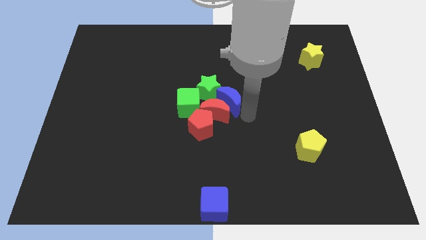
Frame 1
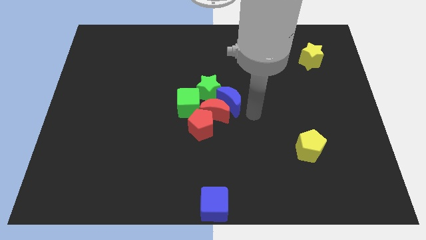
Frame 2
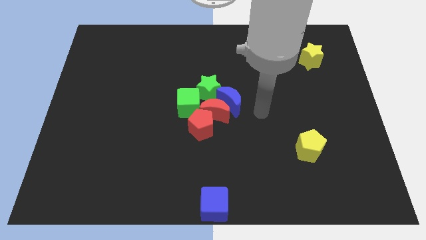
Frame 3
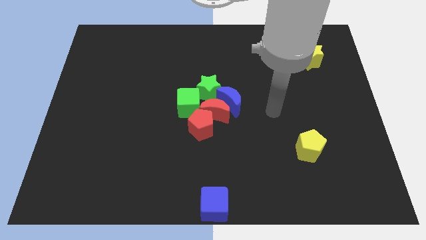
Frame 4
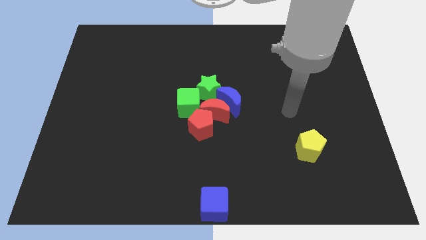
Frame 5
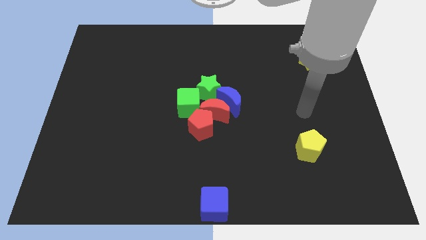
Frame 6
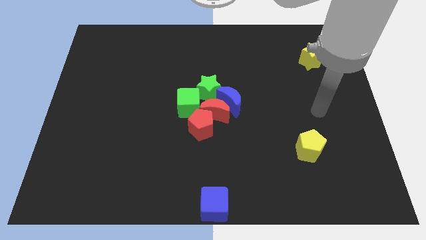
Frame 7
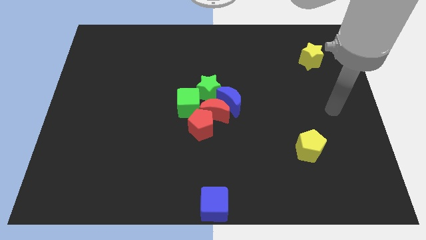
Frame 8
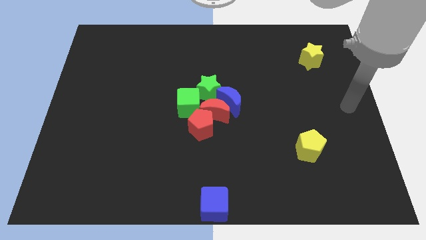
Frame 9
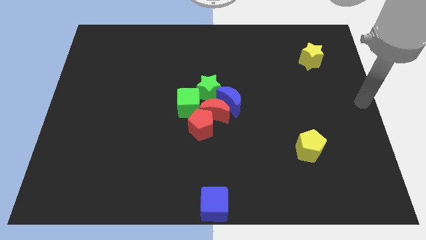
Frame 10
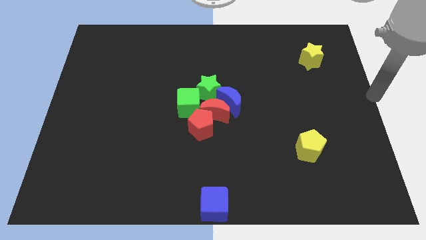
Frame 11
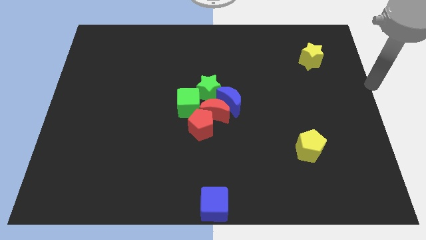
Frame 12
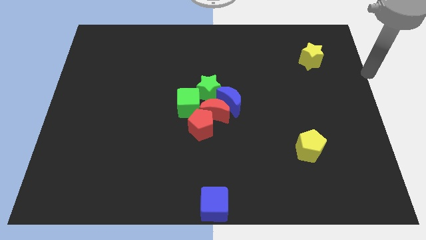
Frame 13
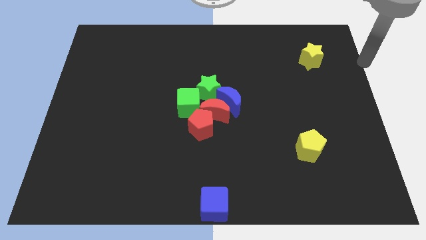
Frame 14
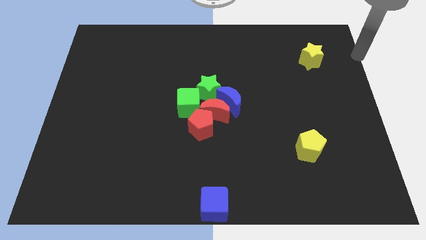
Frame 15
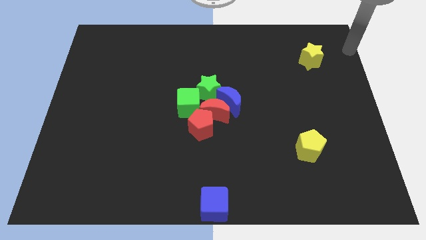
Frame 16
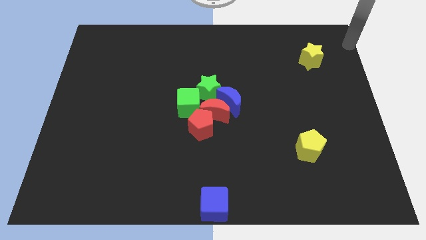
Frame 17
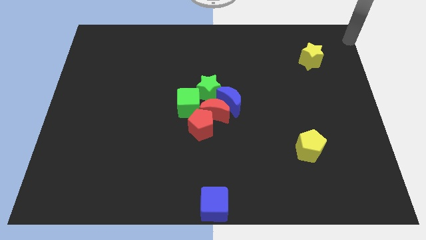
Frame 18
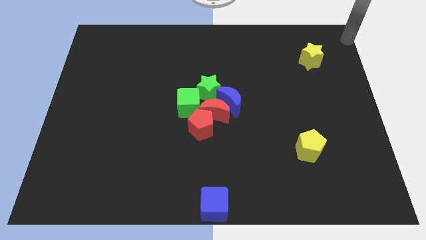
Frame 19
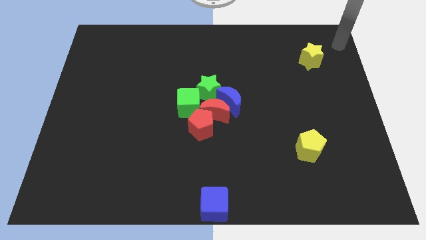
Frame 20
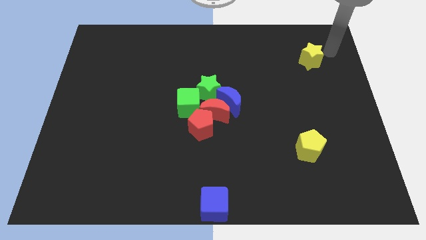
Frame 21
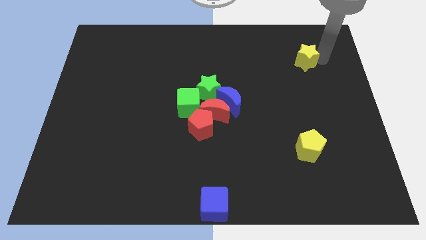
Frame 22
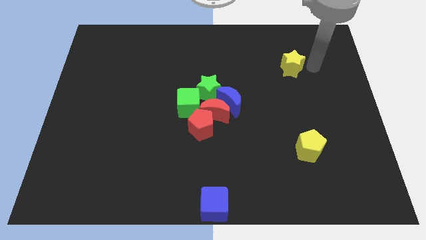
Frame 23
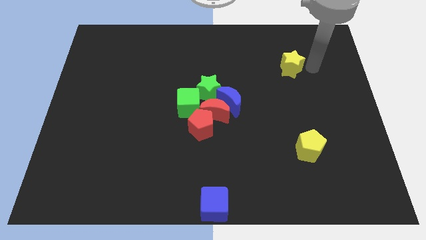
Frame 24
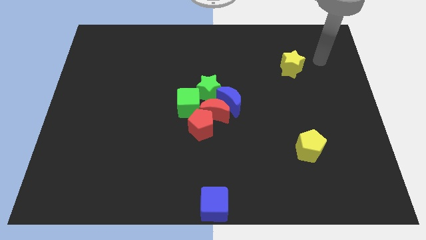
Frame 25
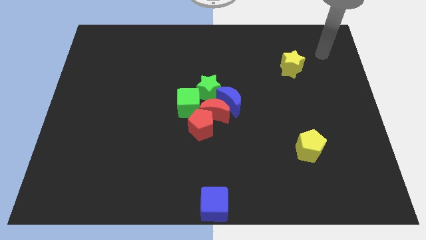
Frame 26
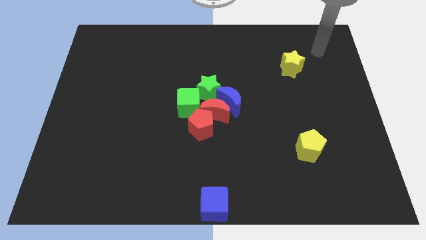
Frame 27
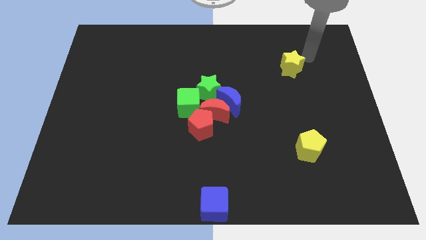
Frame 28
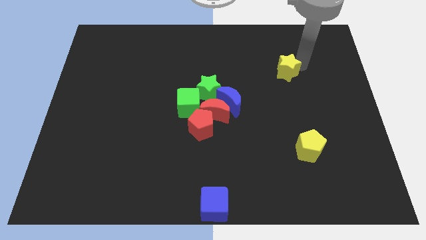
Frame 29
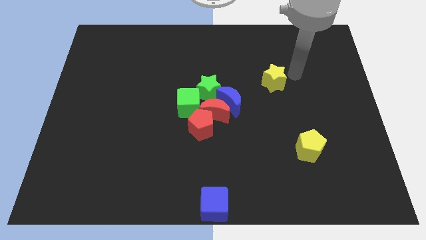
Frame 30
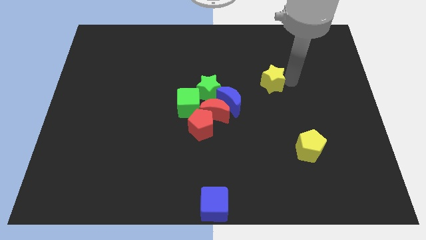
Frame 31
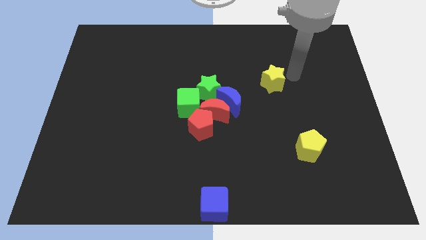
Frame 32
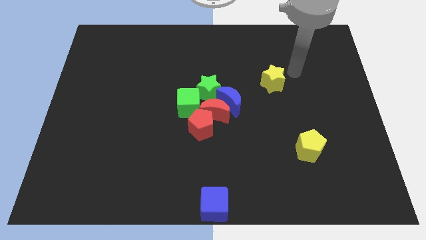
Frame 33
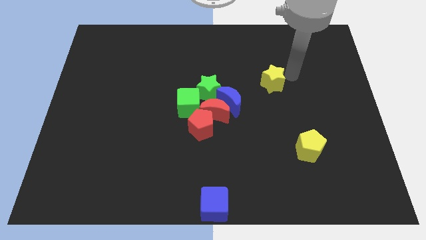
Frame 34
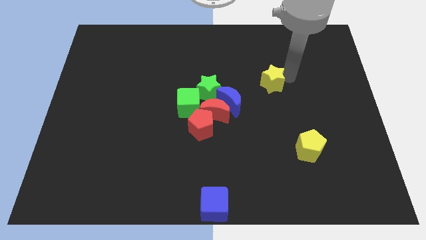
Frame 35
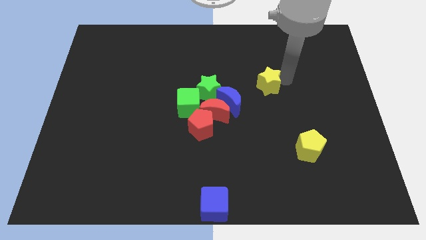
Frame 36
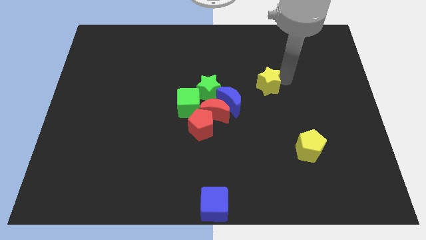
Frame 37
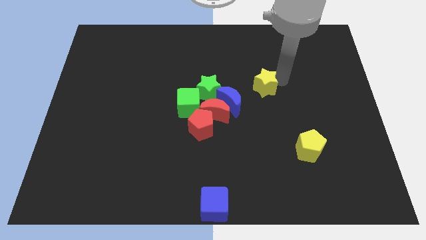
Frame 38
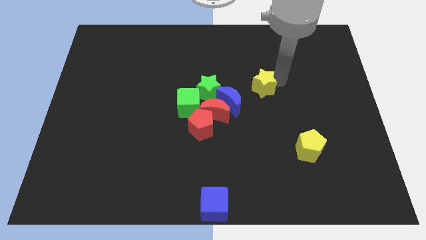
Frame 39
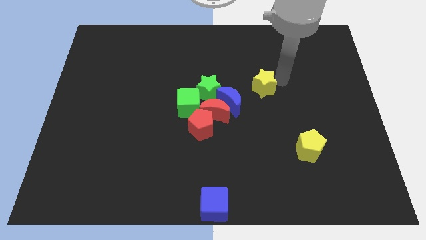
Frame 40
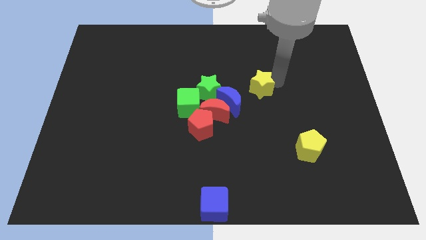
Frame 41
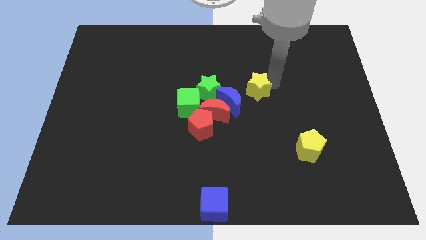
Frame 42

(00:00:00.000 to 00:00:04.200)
move the yellow star close to the blue moon

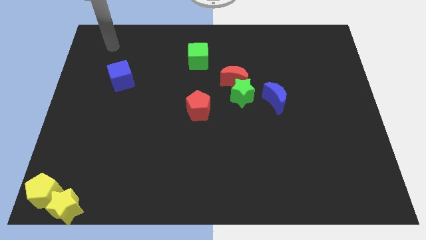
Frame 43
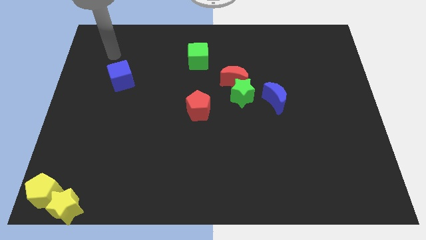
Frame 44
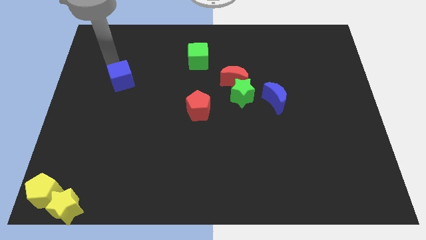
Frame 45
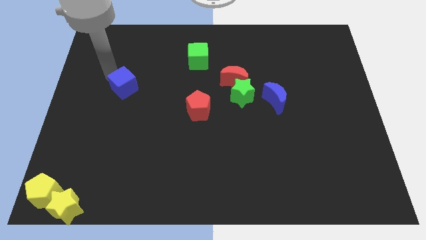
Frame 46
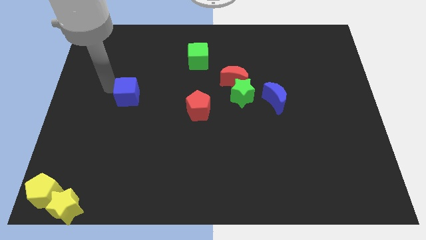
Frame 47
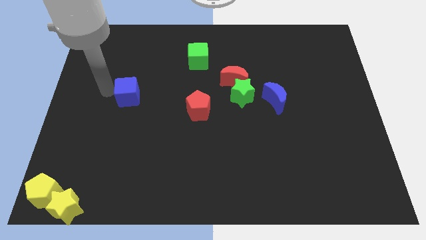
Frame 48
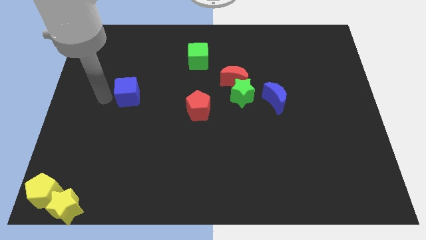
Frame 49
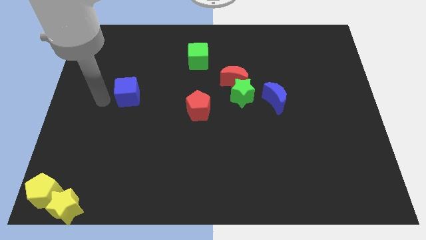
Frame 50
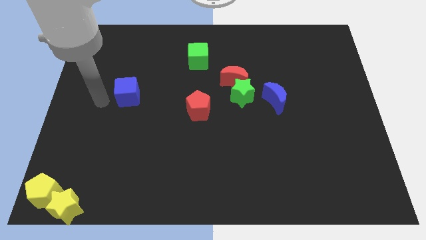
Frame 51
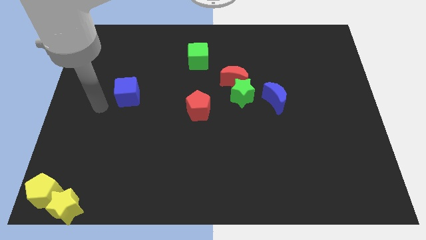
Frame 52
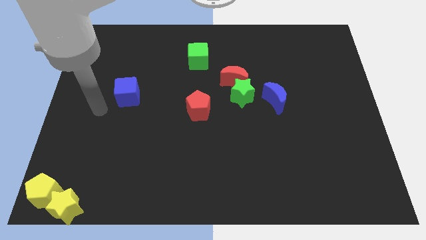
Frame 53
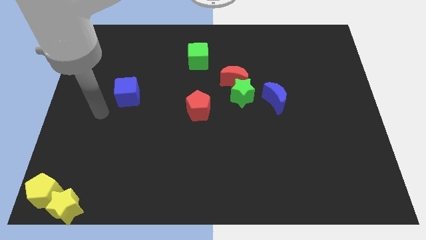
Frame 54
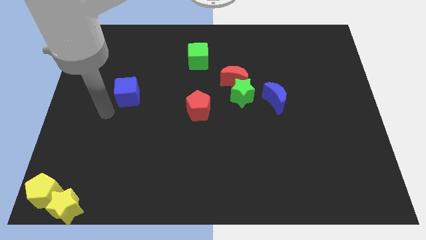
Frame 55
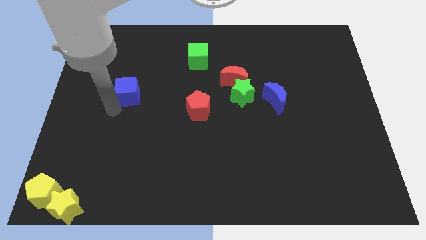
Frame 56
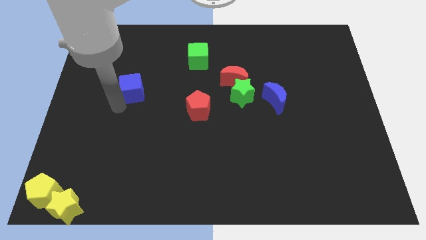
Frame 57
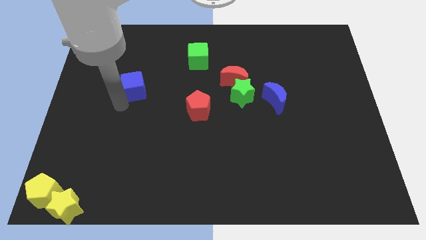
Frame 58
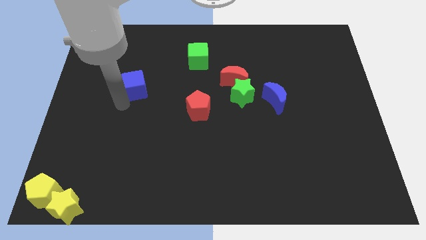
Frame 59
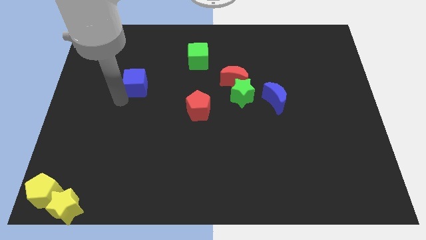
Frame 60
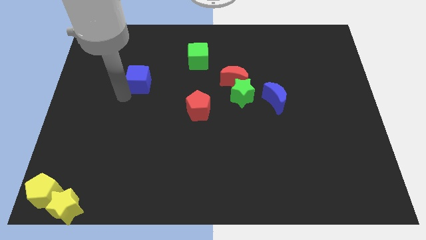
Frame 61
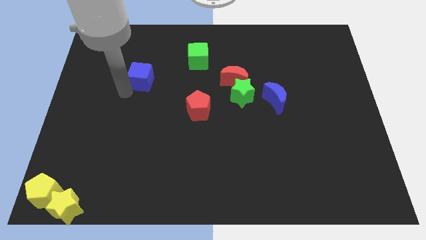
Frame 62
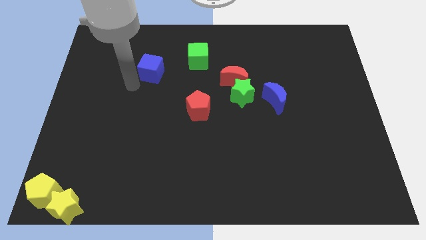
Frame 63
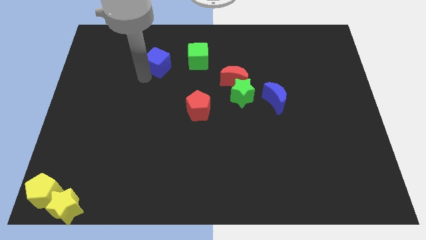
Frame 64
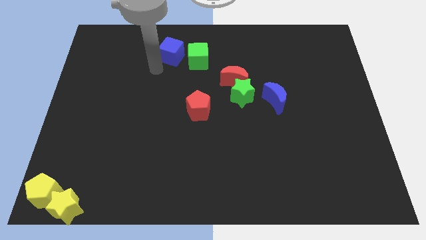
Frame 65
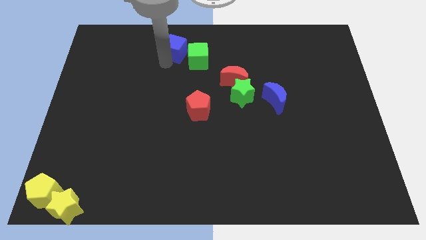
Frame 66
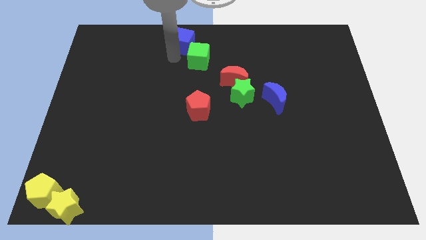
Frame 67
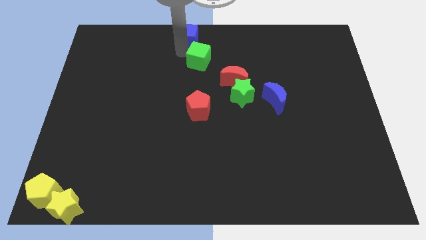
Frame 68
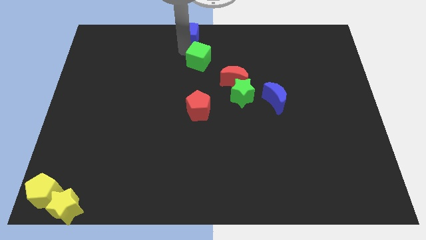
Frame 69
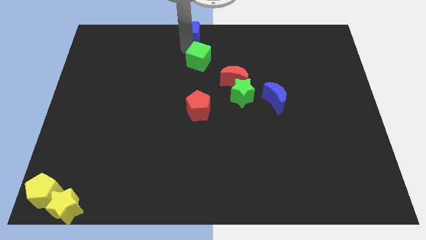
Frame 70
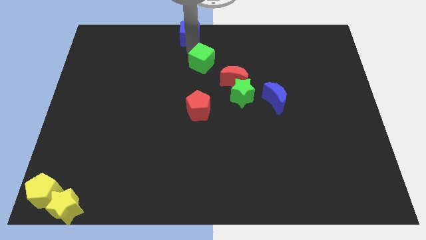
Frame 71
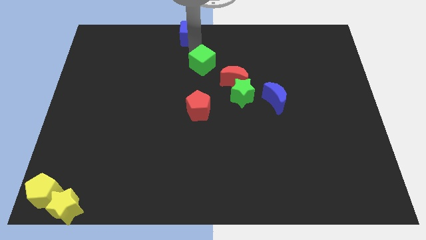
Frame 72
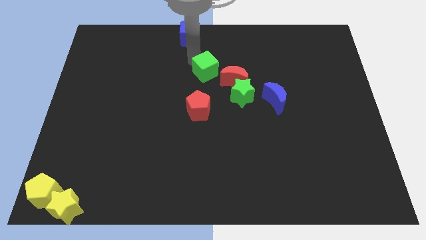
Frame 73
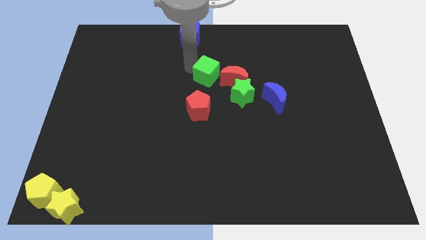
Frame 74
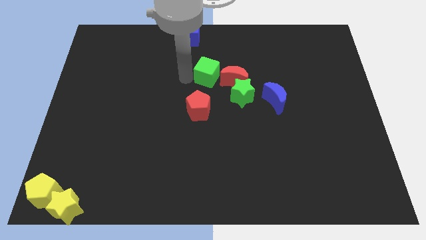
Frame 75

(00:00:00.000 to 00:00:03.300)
move the blue cube to the top center

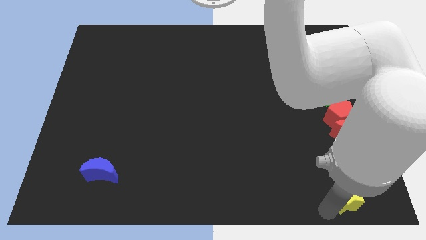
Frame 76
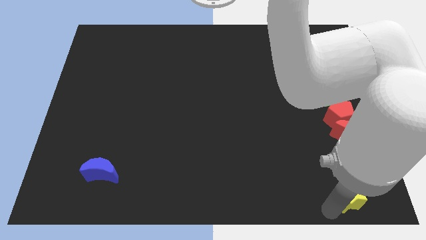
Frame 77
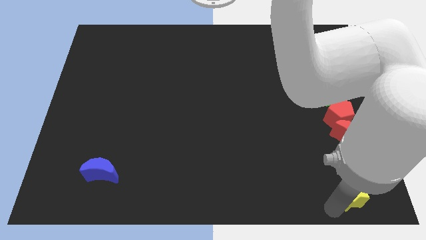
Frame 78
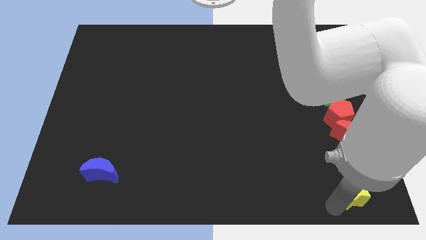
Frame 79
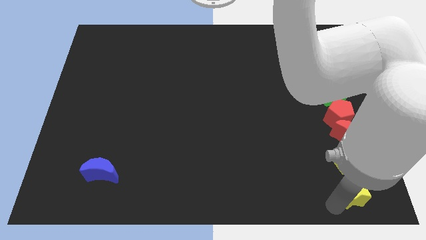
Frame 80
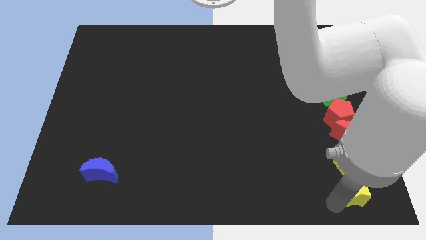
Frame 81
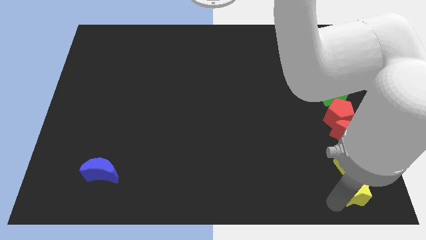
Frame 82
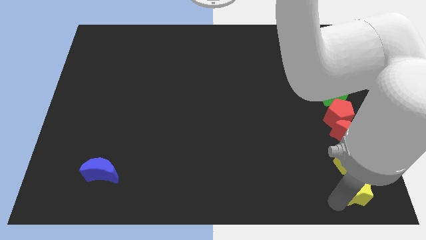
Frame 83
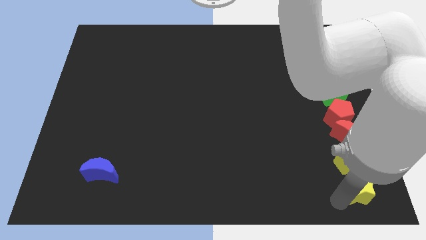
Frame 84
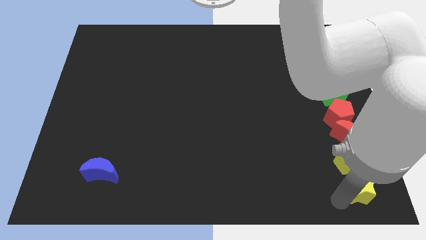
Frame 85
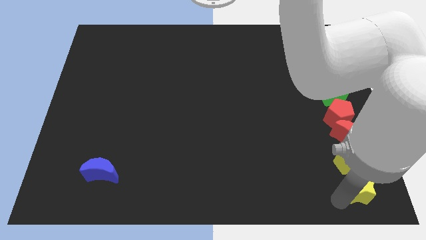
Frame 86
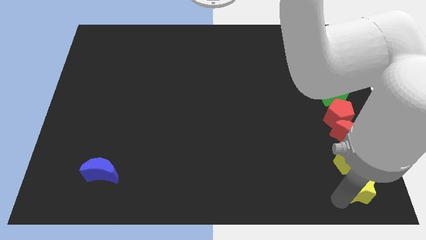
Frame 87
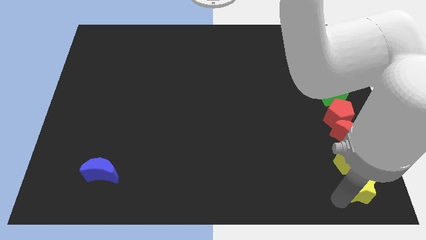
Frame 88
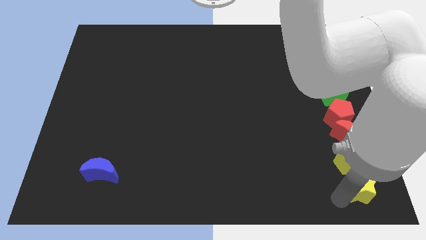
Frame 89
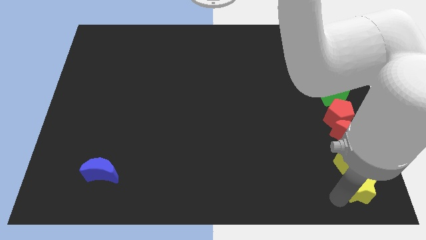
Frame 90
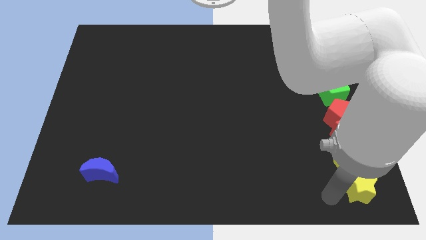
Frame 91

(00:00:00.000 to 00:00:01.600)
move the yellow star to the bottom of the yellow pentagon

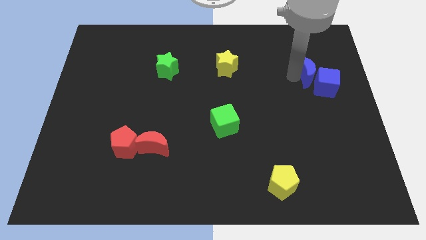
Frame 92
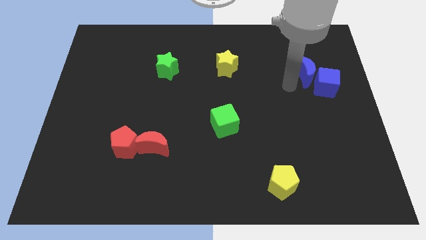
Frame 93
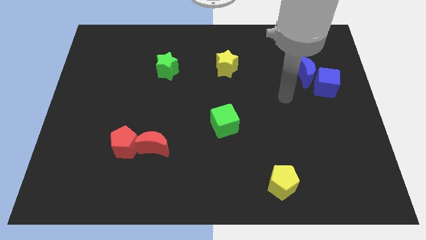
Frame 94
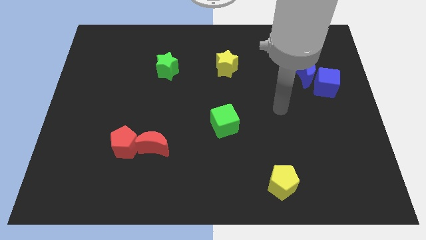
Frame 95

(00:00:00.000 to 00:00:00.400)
move arm away from the blue moon
